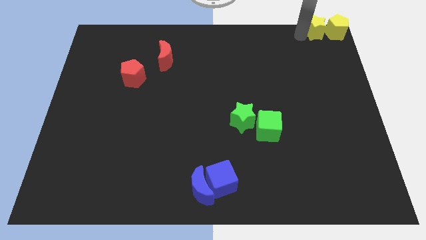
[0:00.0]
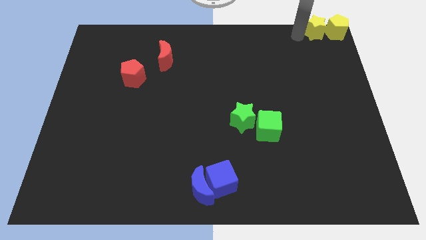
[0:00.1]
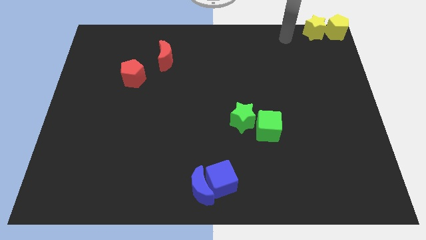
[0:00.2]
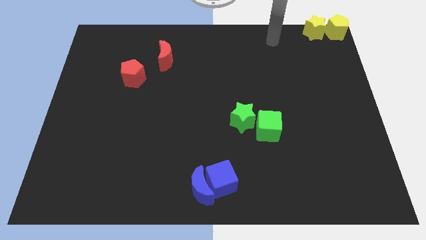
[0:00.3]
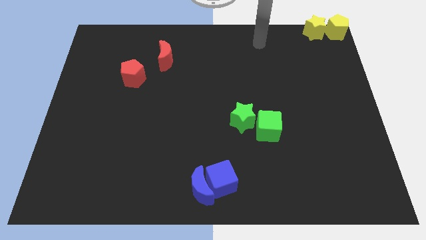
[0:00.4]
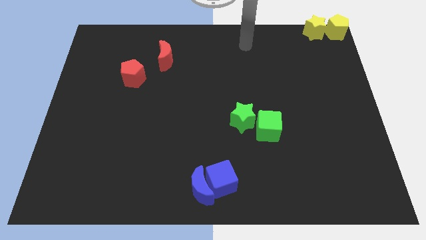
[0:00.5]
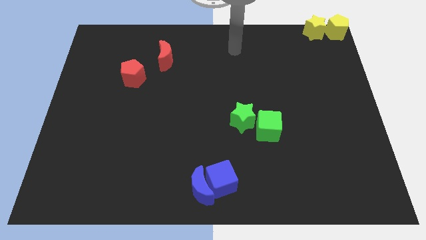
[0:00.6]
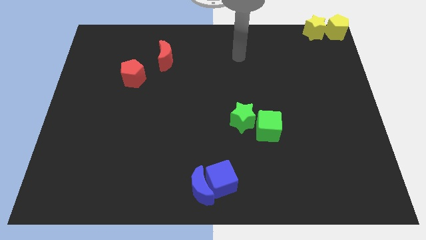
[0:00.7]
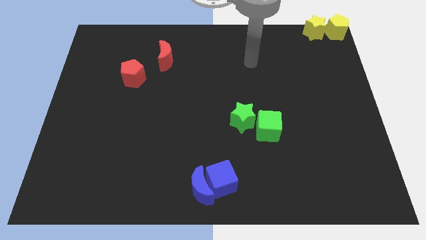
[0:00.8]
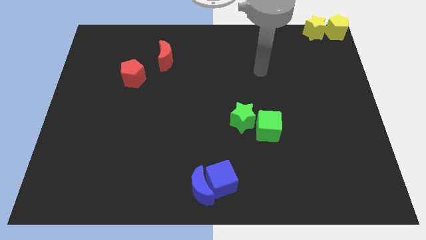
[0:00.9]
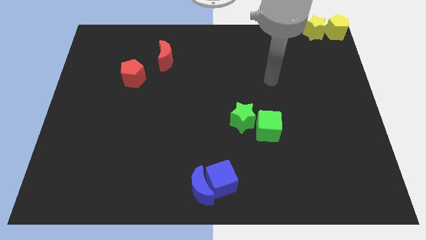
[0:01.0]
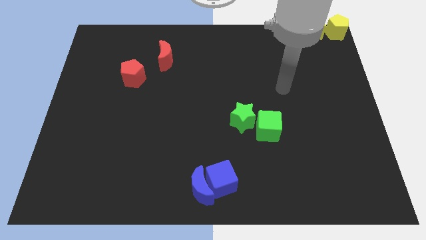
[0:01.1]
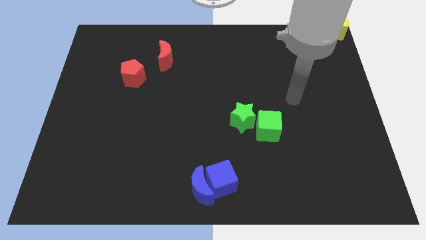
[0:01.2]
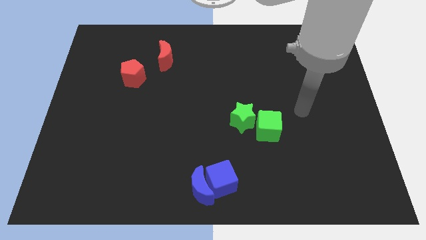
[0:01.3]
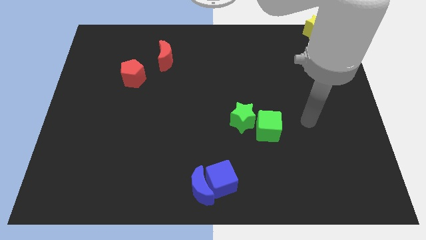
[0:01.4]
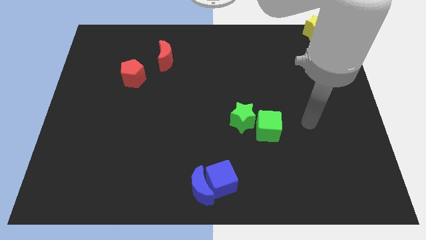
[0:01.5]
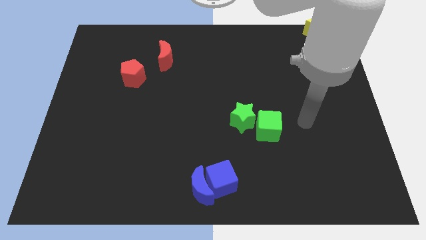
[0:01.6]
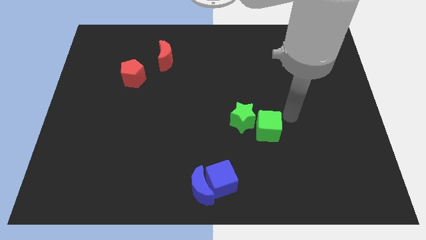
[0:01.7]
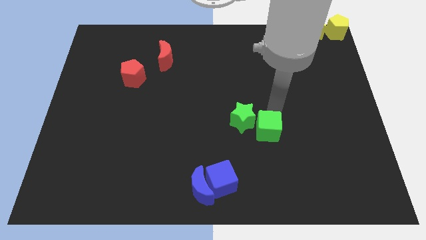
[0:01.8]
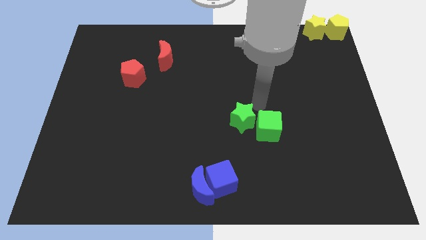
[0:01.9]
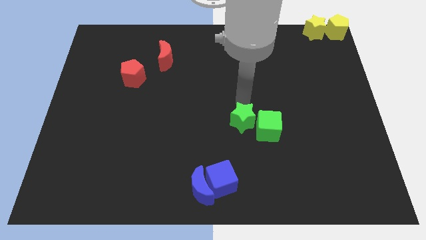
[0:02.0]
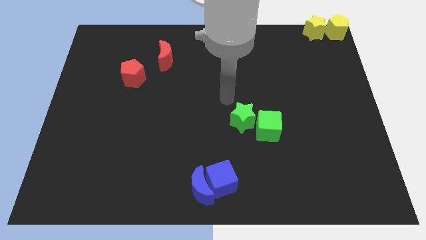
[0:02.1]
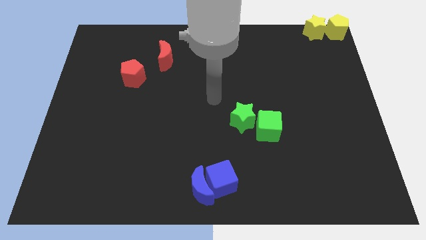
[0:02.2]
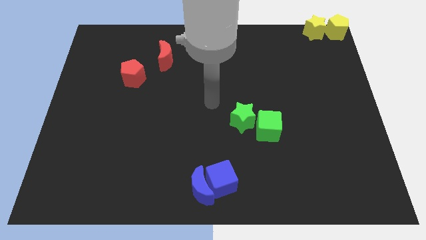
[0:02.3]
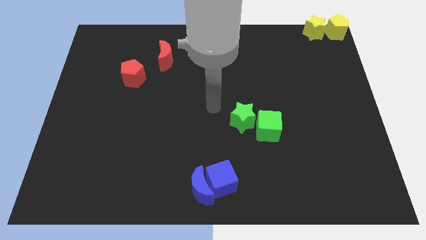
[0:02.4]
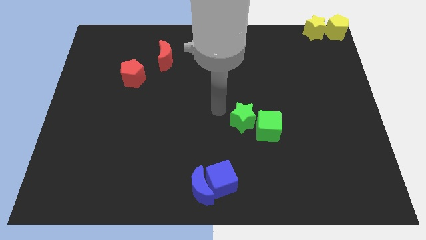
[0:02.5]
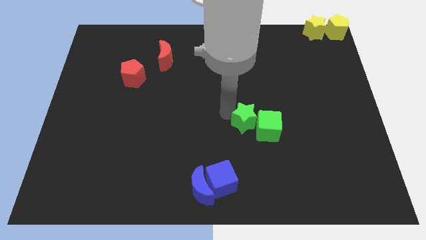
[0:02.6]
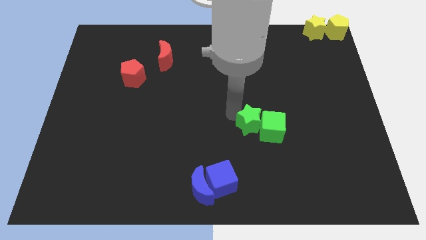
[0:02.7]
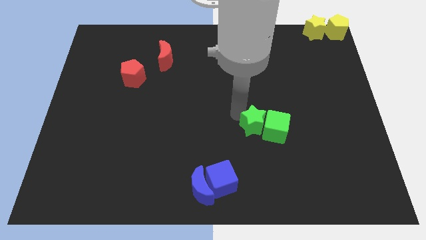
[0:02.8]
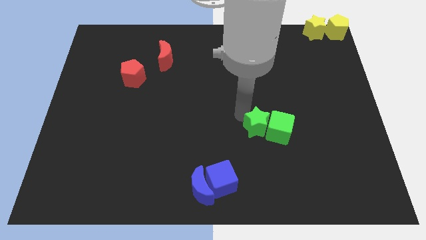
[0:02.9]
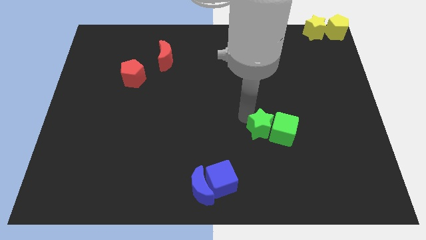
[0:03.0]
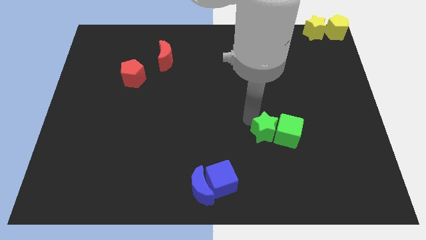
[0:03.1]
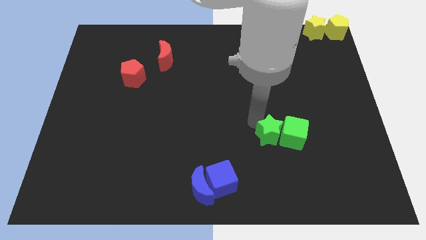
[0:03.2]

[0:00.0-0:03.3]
place the arm to the left of the green star

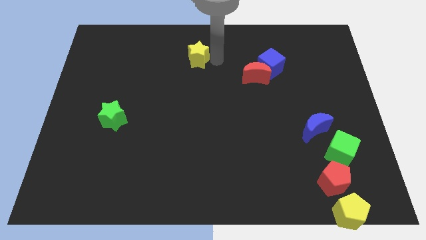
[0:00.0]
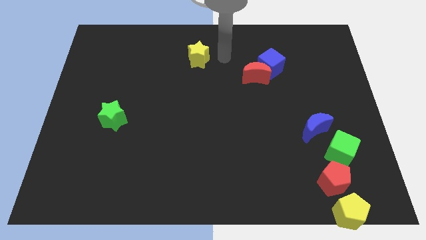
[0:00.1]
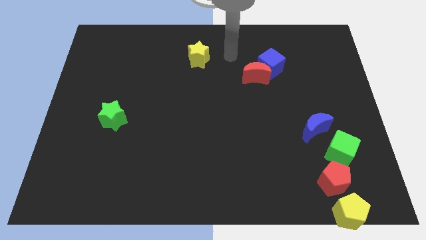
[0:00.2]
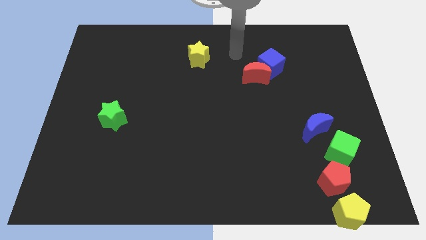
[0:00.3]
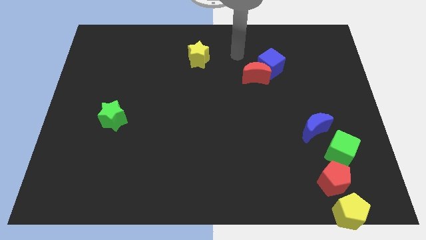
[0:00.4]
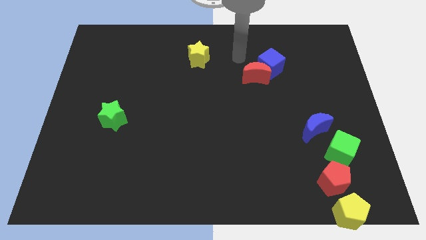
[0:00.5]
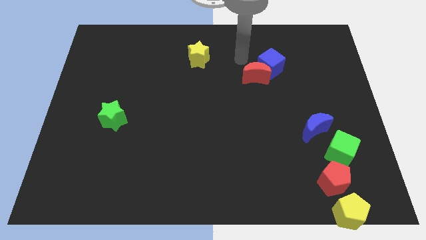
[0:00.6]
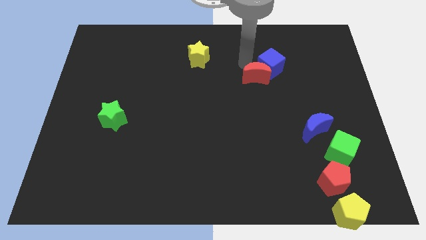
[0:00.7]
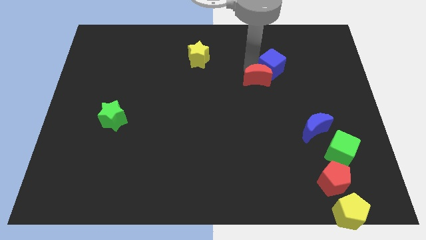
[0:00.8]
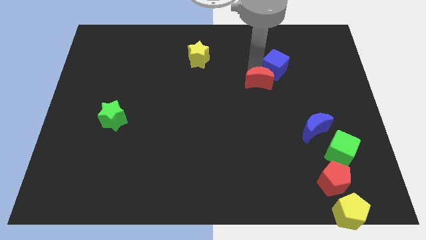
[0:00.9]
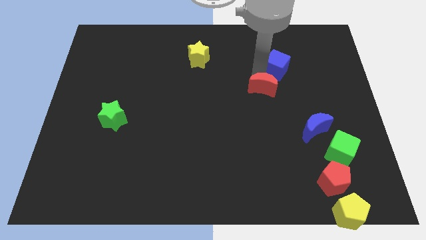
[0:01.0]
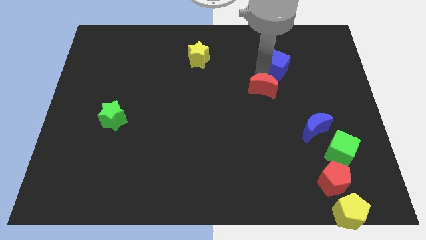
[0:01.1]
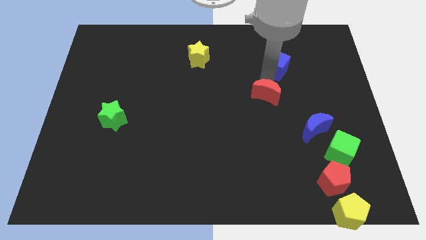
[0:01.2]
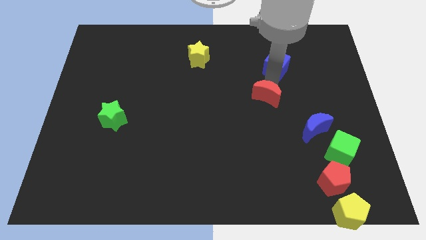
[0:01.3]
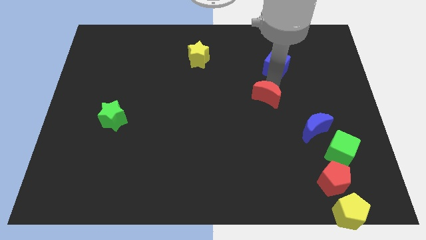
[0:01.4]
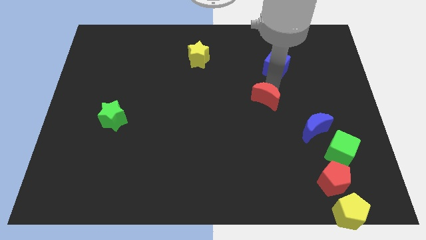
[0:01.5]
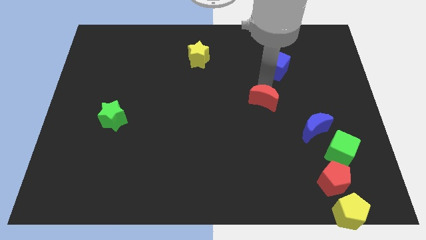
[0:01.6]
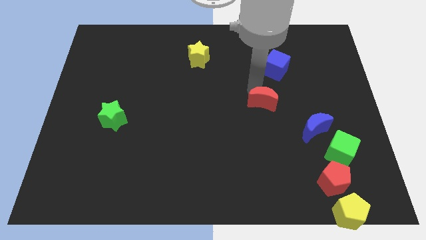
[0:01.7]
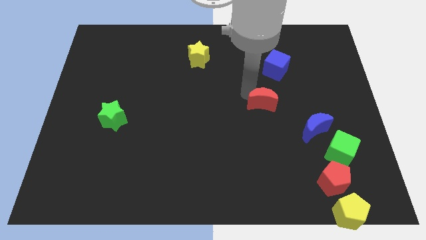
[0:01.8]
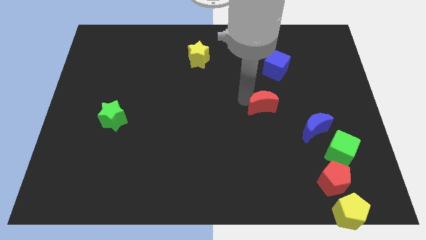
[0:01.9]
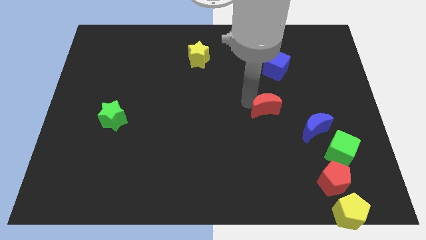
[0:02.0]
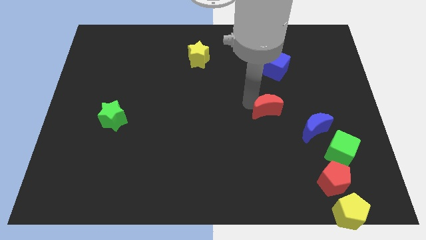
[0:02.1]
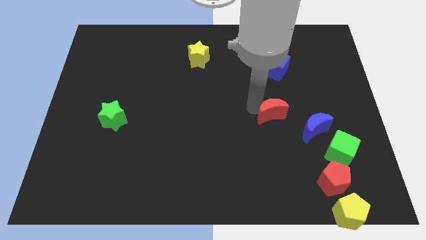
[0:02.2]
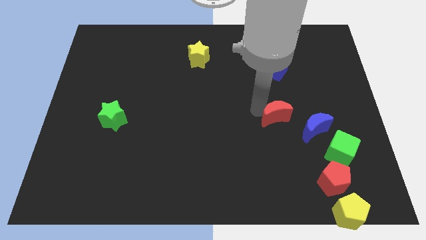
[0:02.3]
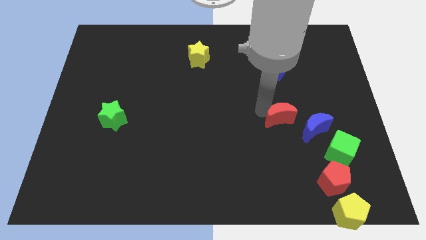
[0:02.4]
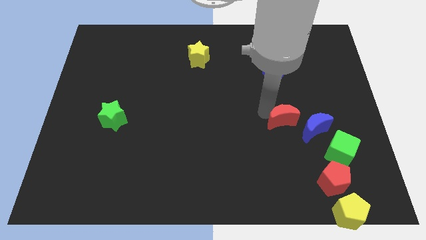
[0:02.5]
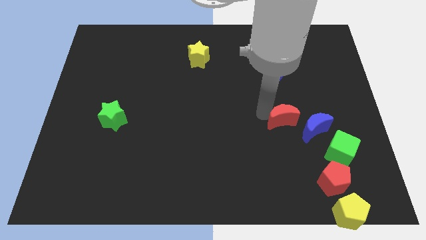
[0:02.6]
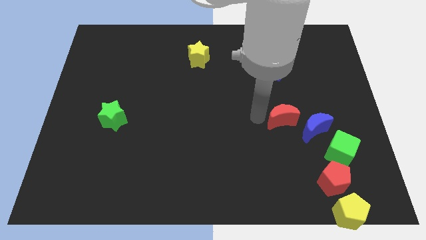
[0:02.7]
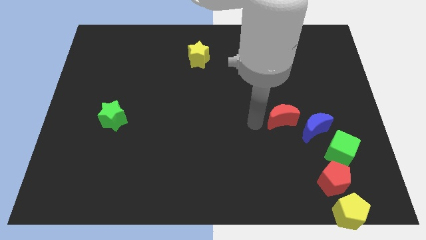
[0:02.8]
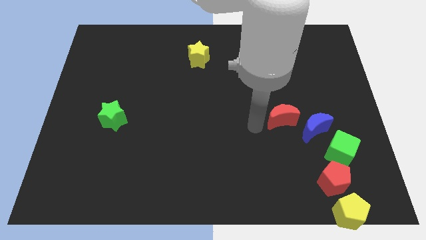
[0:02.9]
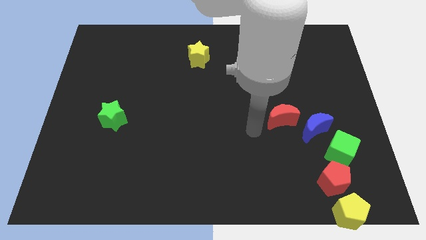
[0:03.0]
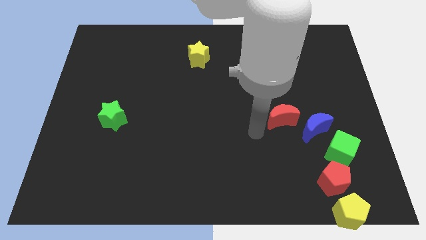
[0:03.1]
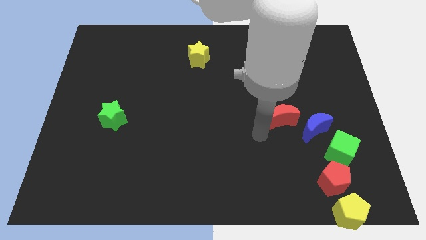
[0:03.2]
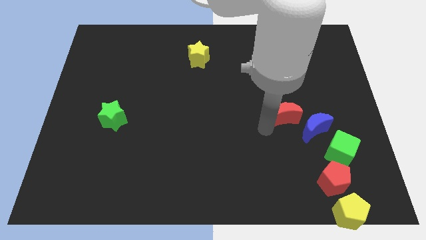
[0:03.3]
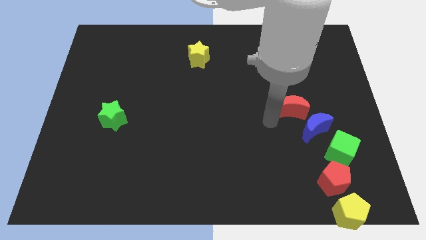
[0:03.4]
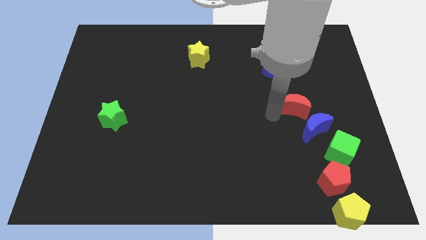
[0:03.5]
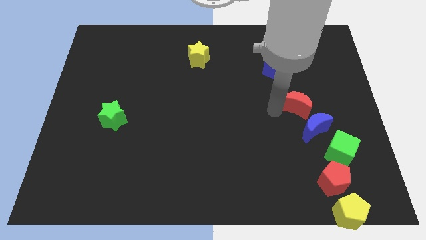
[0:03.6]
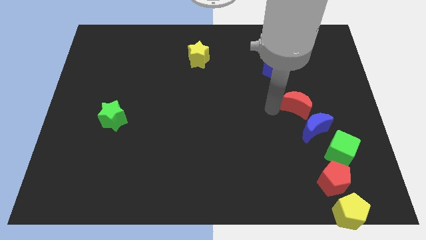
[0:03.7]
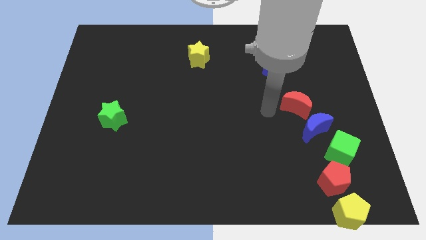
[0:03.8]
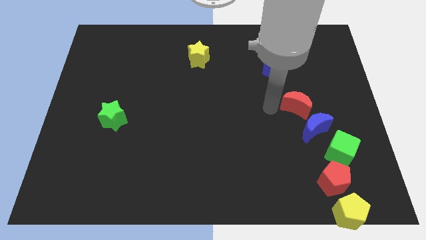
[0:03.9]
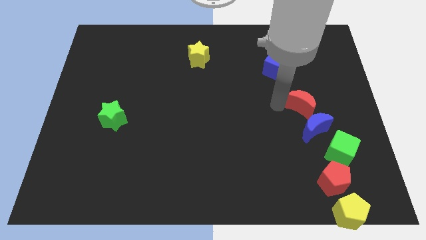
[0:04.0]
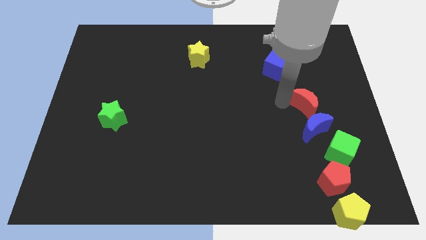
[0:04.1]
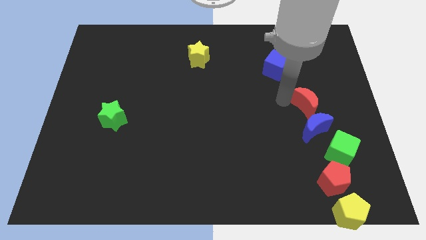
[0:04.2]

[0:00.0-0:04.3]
push the red crescent to the top of the blue crescent

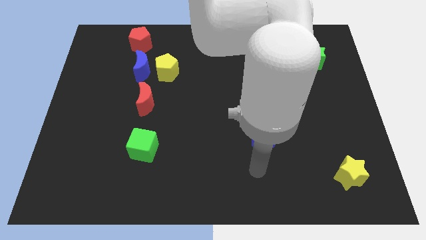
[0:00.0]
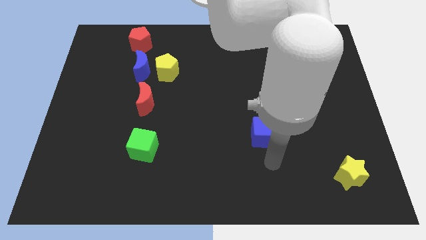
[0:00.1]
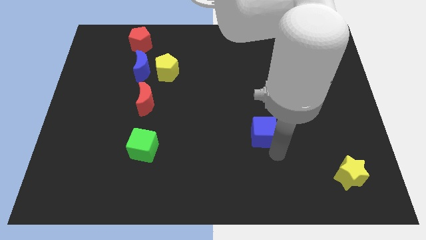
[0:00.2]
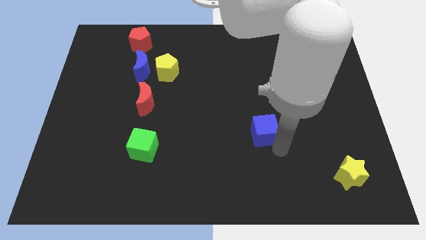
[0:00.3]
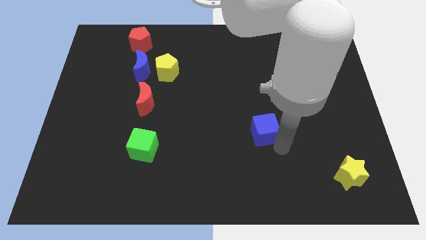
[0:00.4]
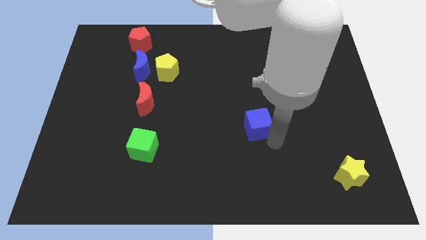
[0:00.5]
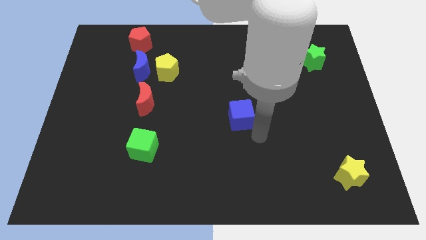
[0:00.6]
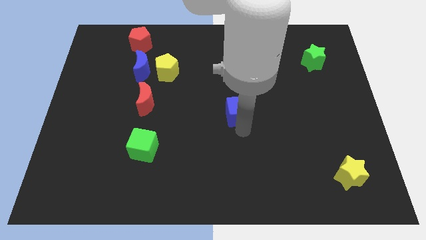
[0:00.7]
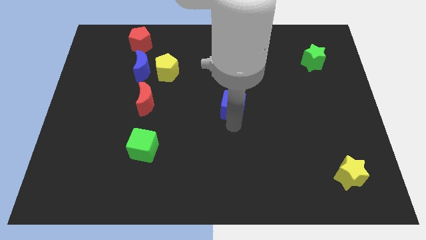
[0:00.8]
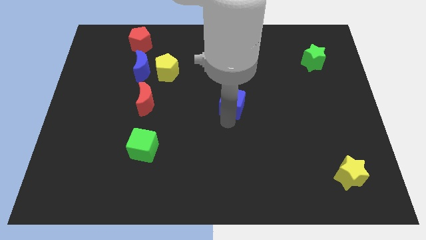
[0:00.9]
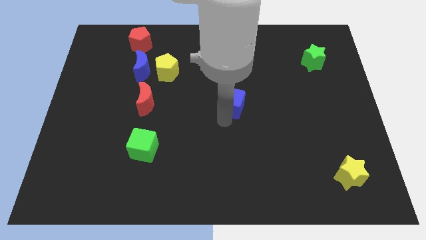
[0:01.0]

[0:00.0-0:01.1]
push the blue moon diagonally top right to green cube

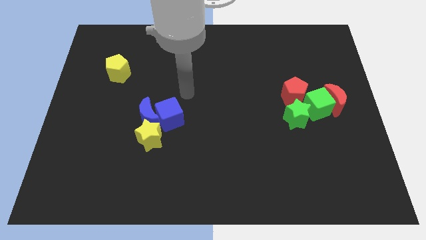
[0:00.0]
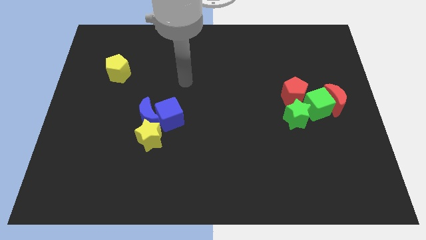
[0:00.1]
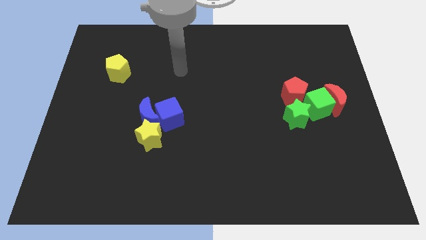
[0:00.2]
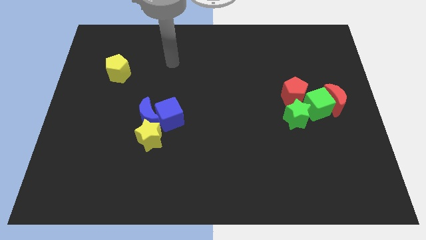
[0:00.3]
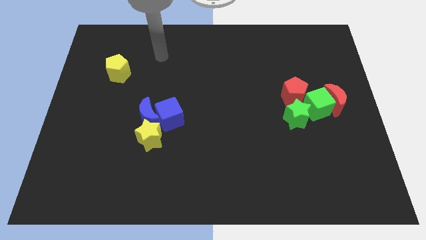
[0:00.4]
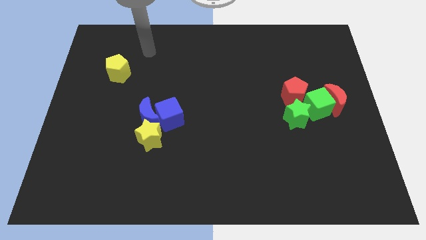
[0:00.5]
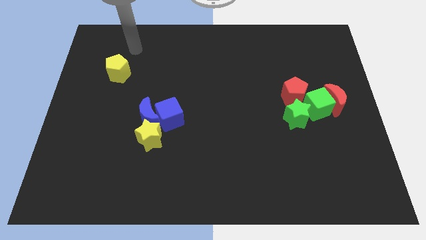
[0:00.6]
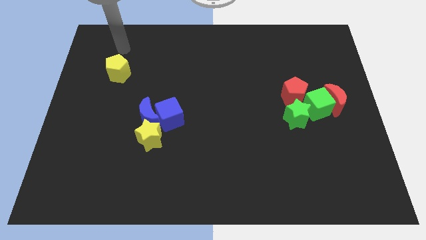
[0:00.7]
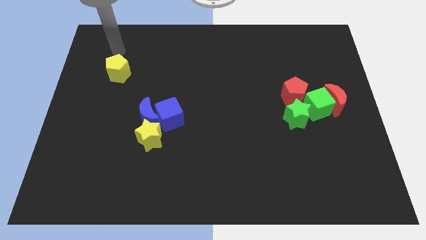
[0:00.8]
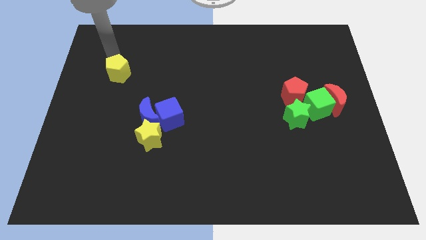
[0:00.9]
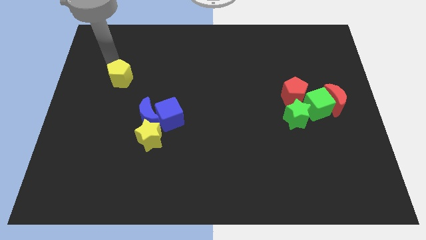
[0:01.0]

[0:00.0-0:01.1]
tap the yellow pentagon
